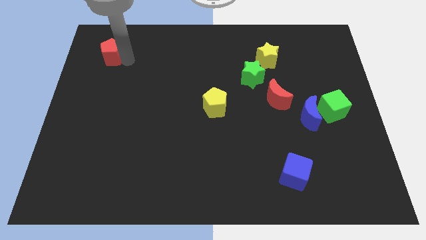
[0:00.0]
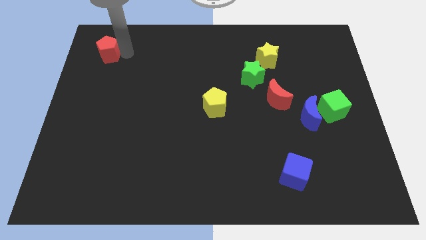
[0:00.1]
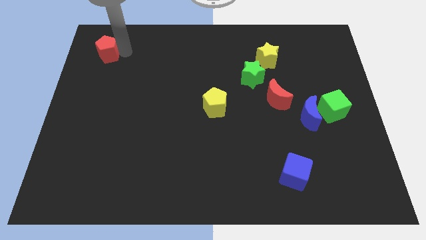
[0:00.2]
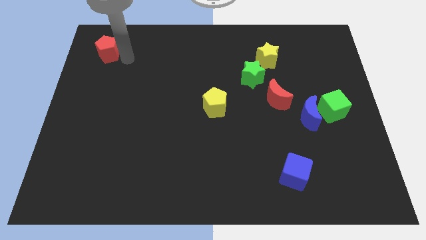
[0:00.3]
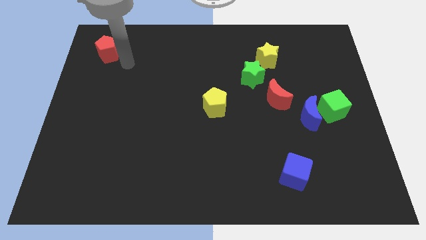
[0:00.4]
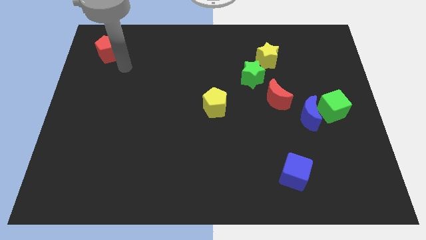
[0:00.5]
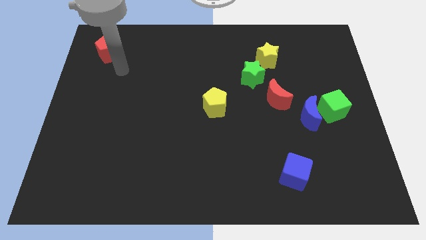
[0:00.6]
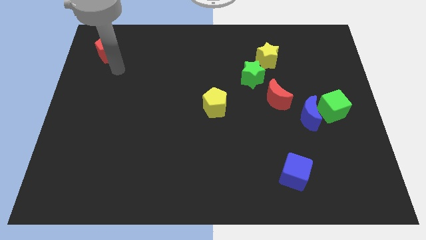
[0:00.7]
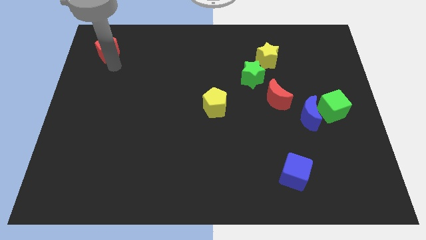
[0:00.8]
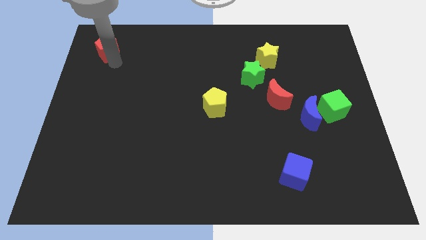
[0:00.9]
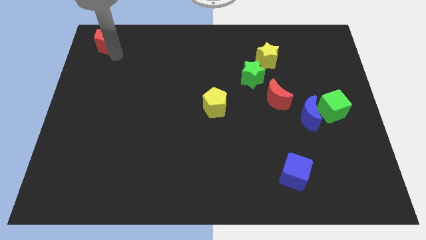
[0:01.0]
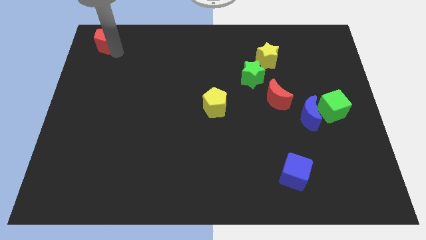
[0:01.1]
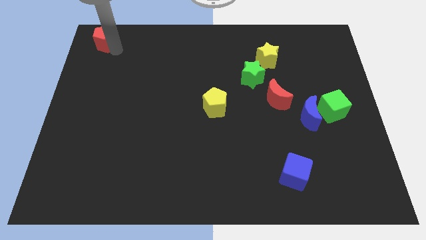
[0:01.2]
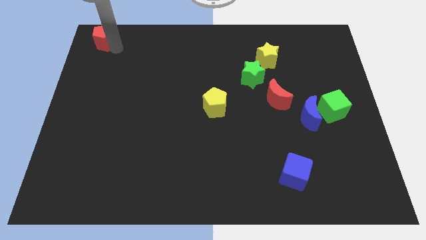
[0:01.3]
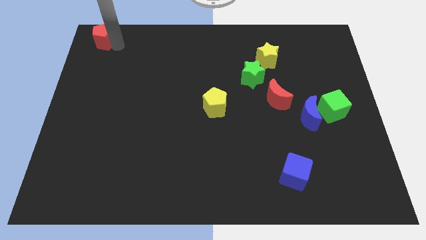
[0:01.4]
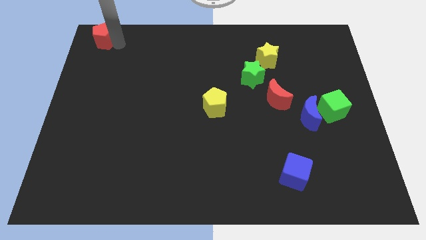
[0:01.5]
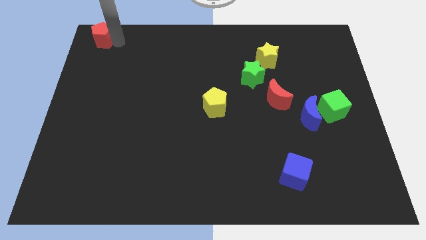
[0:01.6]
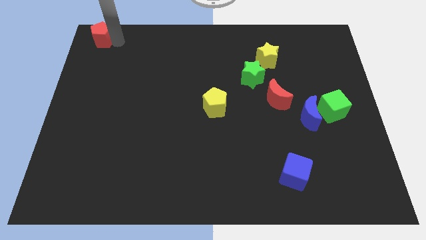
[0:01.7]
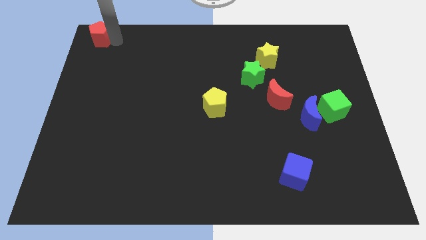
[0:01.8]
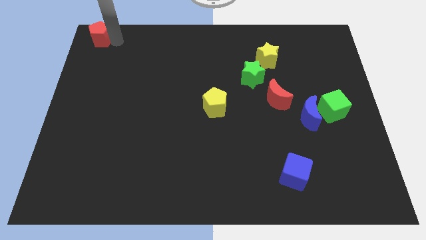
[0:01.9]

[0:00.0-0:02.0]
move the red pentagon to the top left of the board

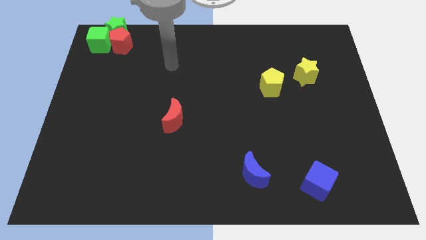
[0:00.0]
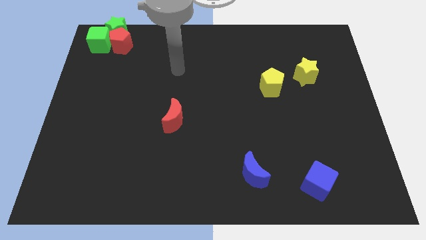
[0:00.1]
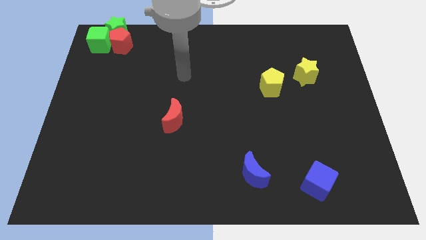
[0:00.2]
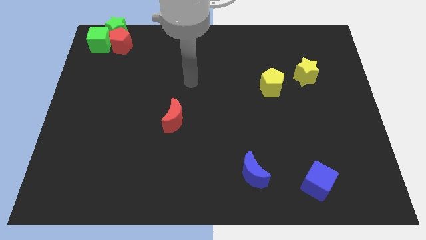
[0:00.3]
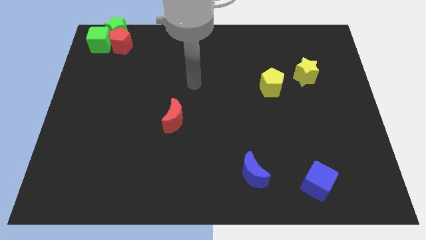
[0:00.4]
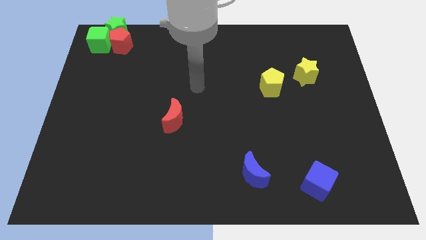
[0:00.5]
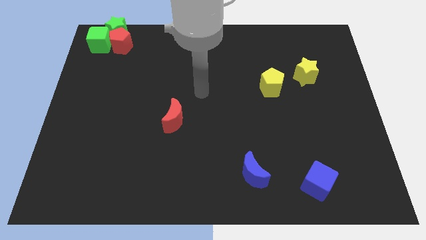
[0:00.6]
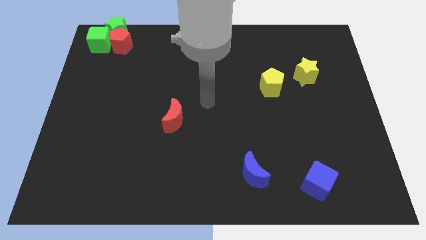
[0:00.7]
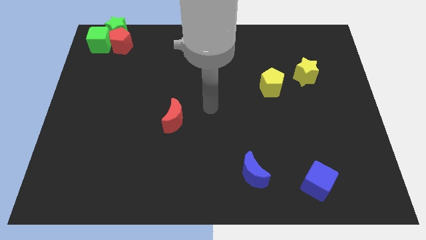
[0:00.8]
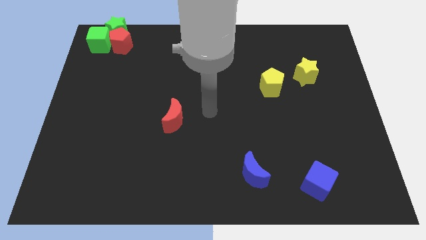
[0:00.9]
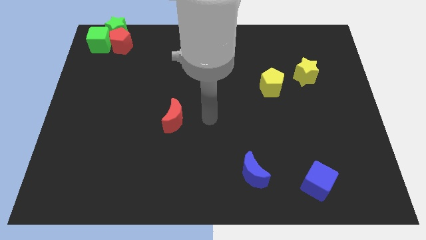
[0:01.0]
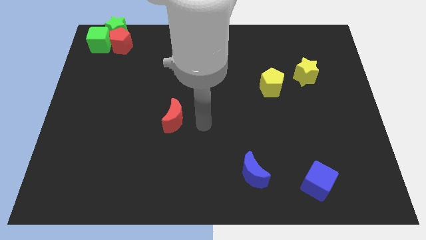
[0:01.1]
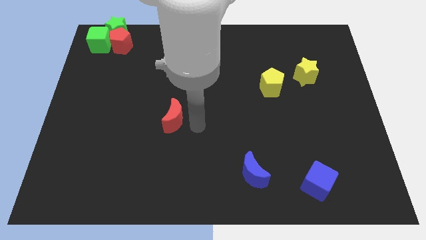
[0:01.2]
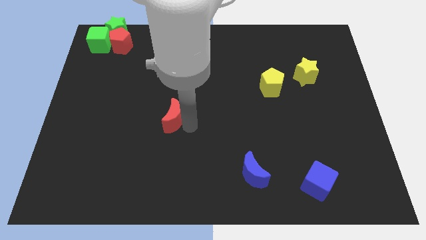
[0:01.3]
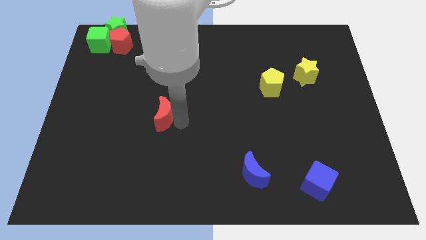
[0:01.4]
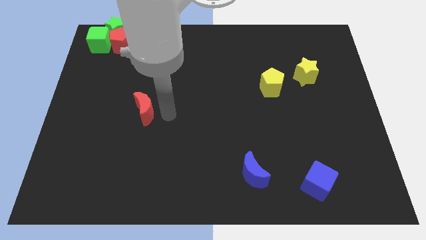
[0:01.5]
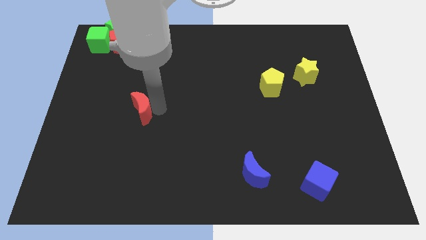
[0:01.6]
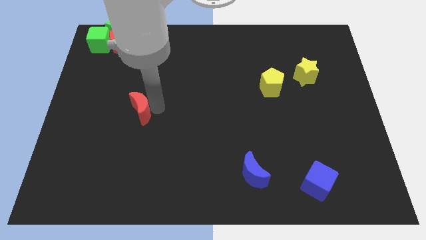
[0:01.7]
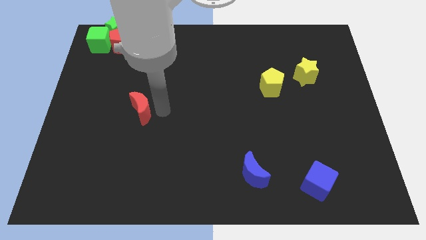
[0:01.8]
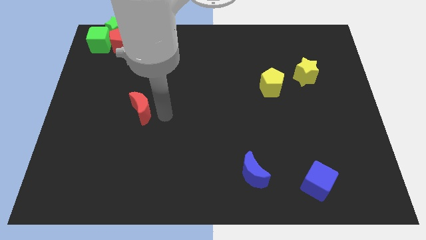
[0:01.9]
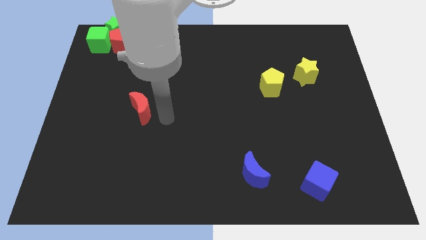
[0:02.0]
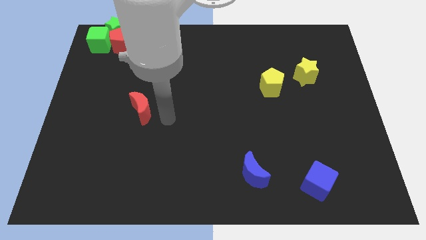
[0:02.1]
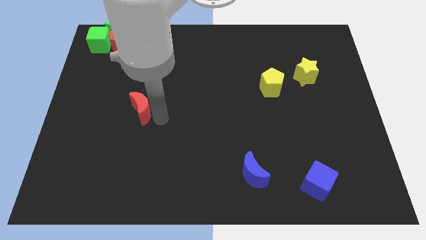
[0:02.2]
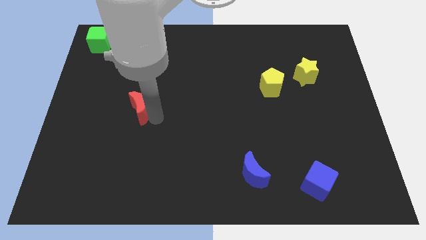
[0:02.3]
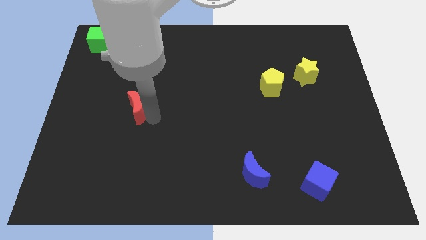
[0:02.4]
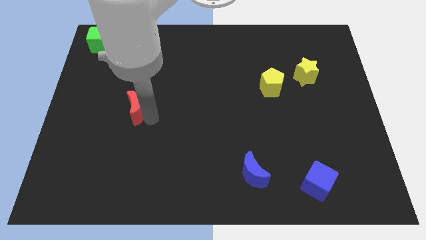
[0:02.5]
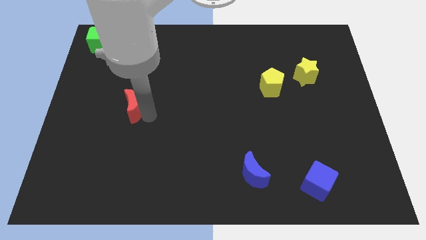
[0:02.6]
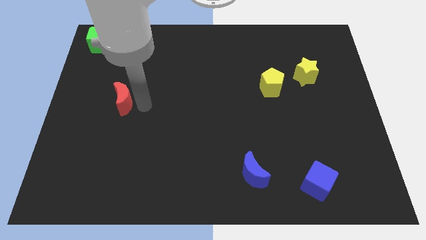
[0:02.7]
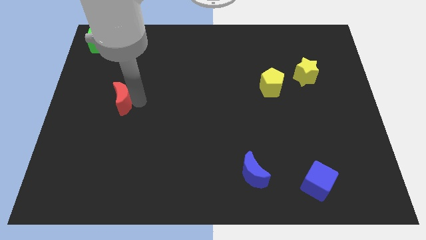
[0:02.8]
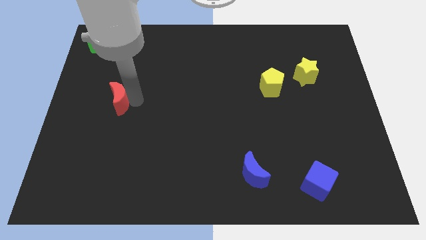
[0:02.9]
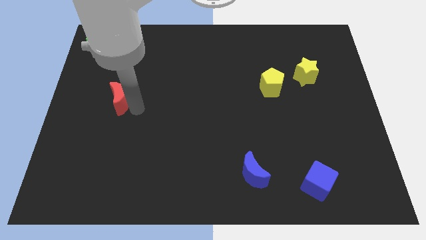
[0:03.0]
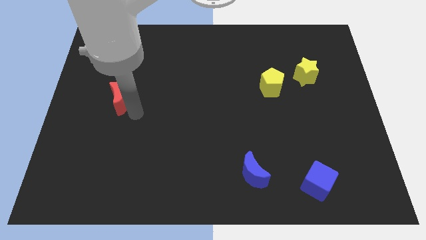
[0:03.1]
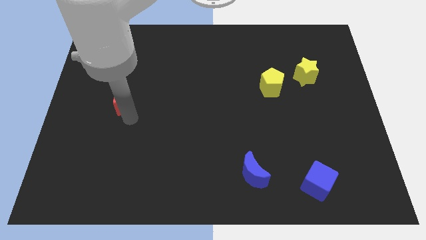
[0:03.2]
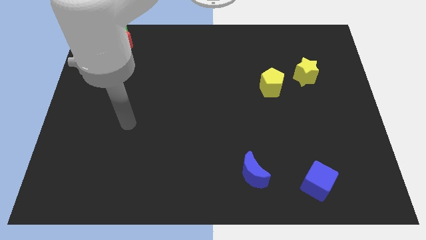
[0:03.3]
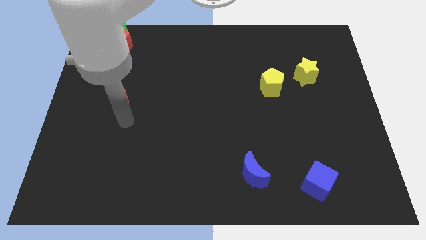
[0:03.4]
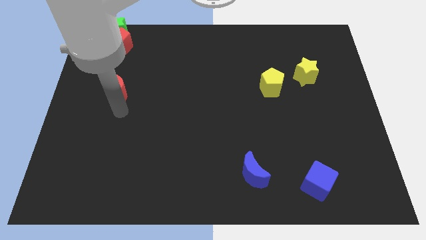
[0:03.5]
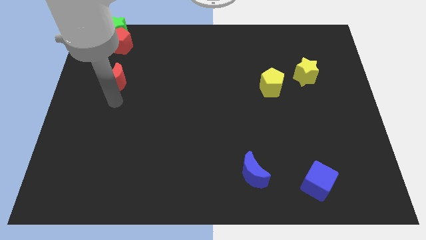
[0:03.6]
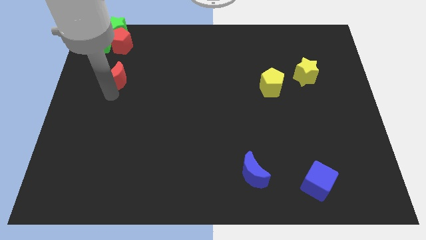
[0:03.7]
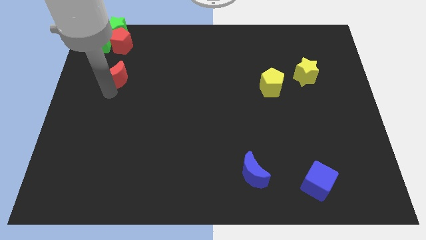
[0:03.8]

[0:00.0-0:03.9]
drag the red crescent vertically to the bottom side of the red pentagon

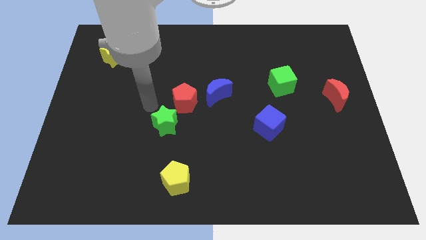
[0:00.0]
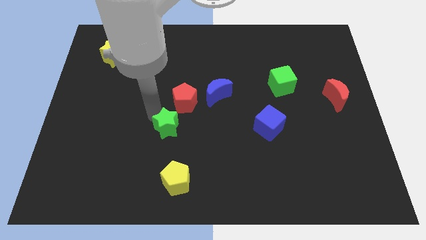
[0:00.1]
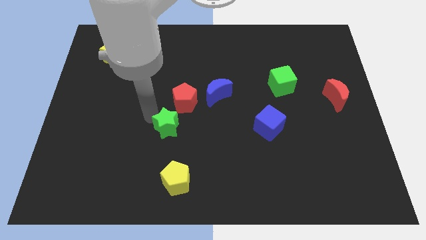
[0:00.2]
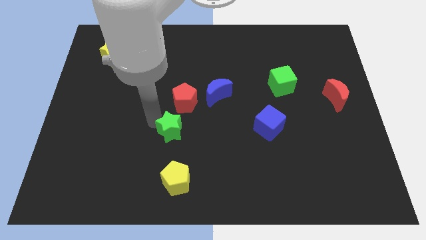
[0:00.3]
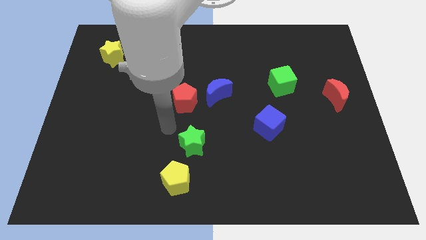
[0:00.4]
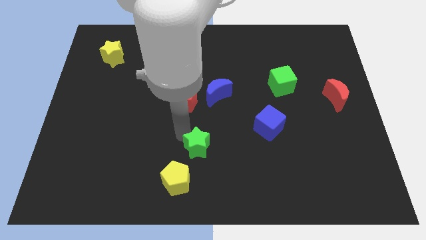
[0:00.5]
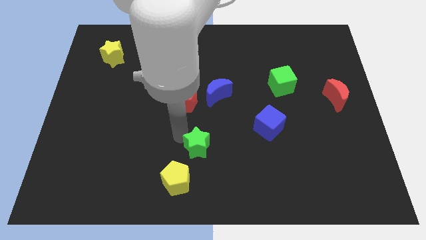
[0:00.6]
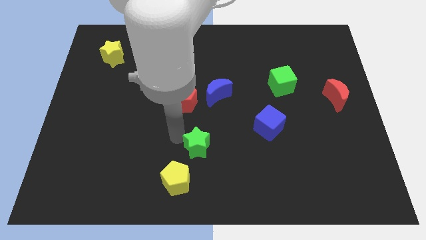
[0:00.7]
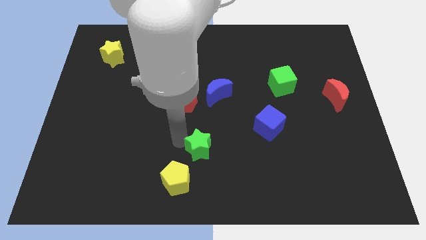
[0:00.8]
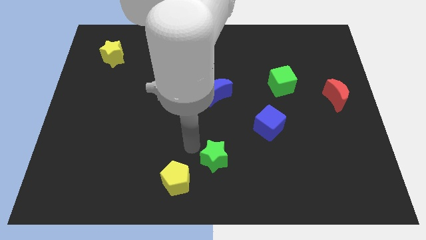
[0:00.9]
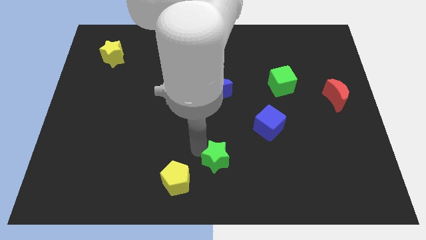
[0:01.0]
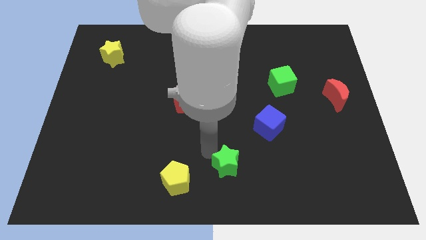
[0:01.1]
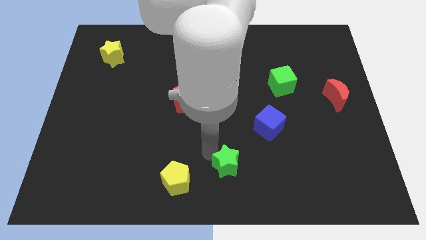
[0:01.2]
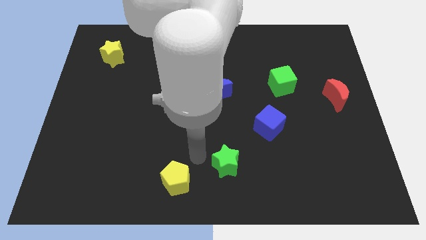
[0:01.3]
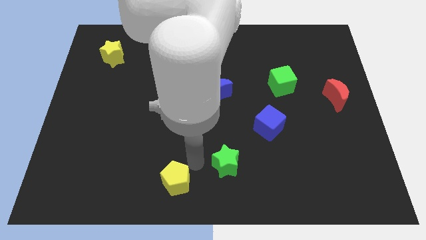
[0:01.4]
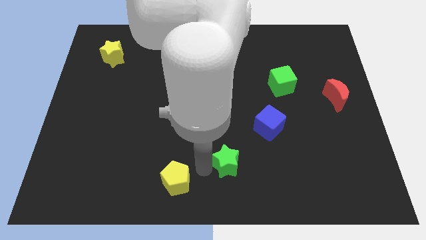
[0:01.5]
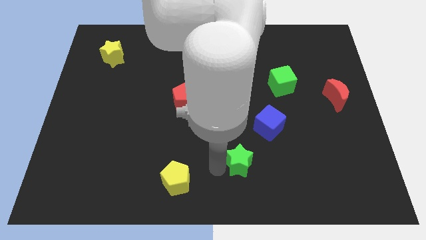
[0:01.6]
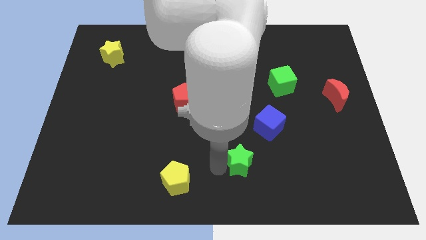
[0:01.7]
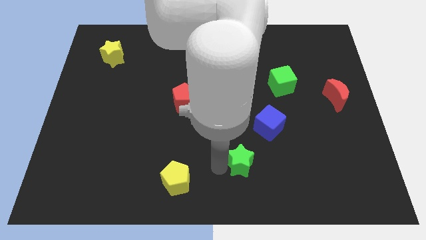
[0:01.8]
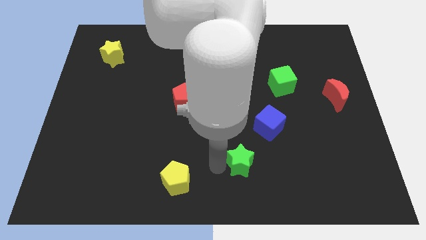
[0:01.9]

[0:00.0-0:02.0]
push the green star to the bottom left of the blue cube

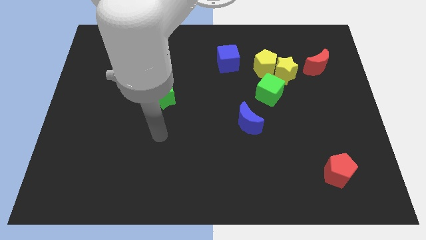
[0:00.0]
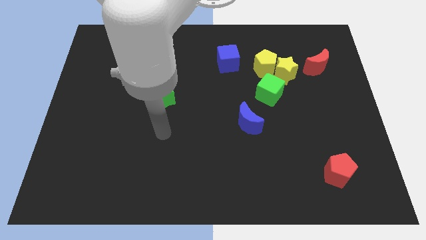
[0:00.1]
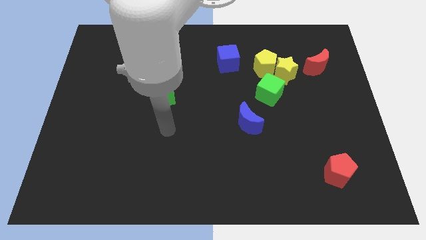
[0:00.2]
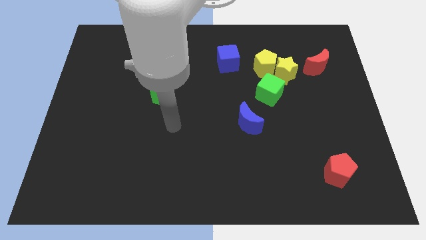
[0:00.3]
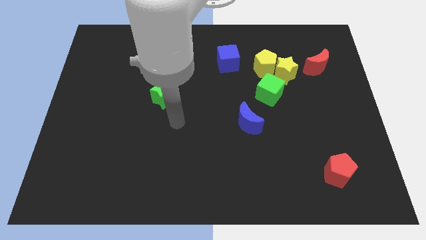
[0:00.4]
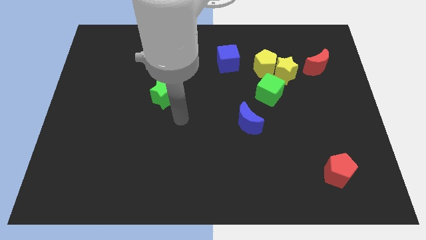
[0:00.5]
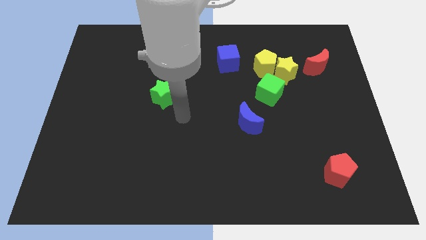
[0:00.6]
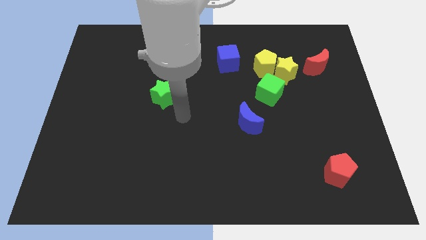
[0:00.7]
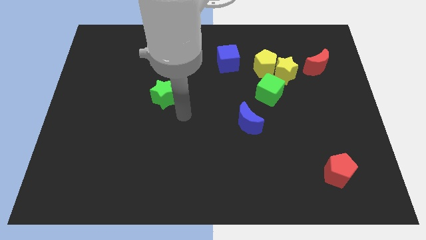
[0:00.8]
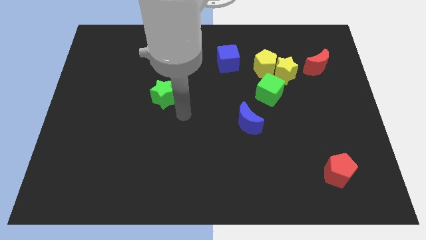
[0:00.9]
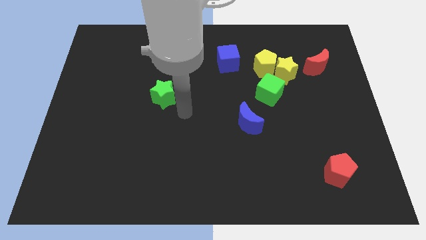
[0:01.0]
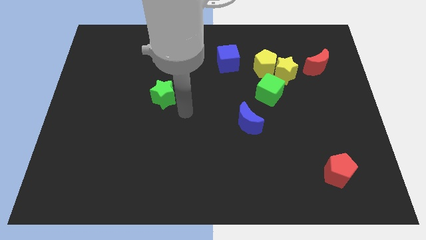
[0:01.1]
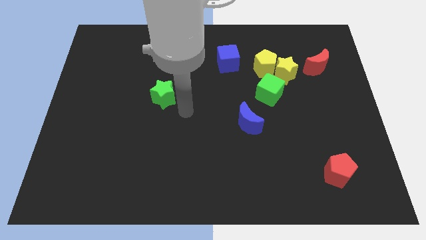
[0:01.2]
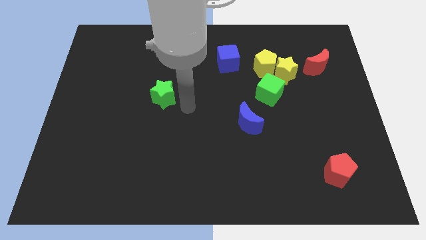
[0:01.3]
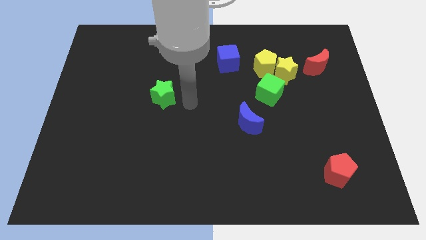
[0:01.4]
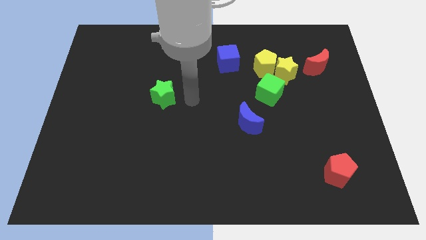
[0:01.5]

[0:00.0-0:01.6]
place your arm at the right of the green star
